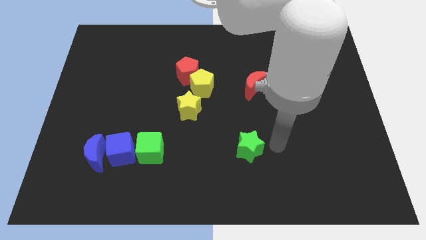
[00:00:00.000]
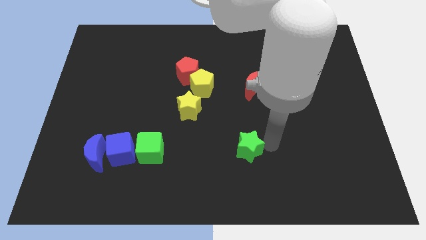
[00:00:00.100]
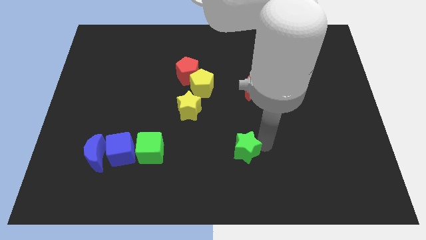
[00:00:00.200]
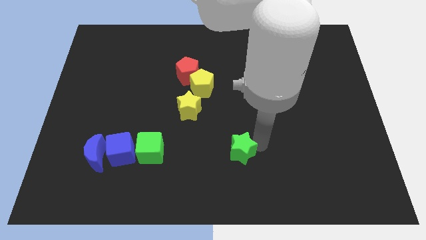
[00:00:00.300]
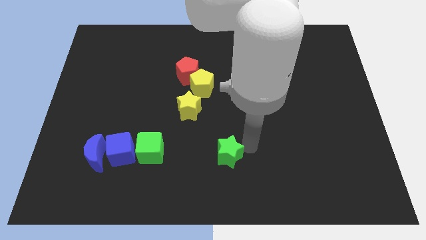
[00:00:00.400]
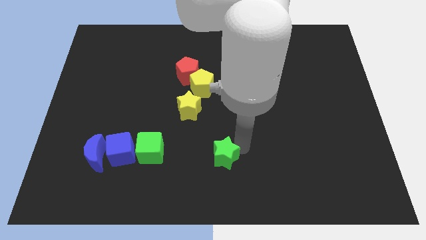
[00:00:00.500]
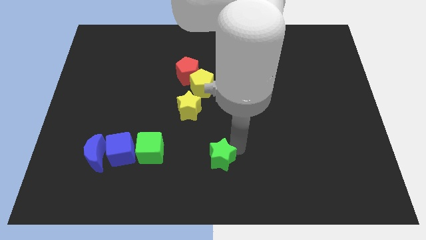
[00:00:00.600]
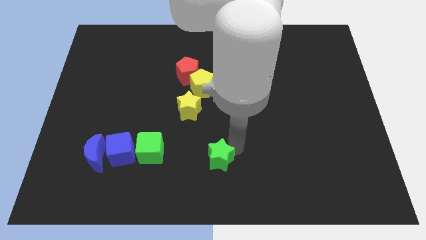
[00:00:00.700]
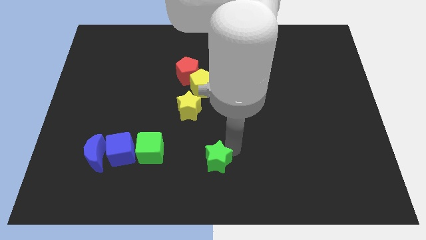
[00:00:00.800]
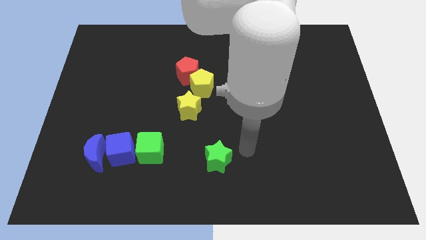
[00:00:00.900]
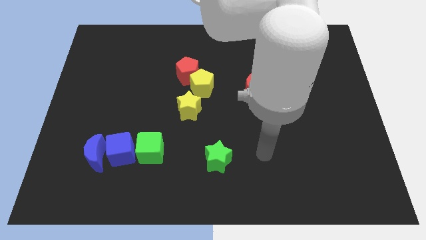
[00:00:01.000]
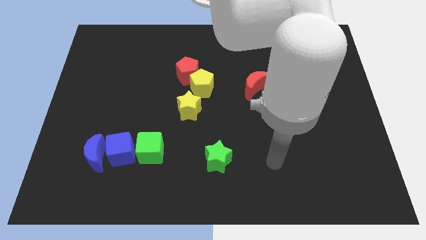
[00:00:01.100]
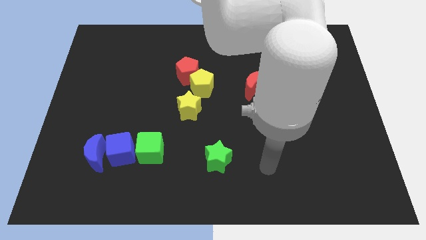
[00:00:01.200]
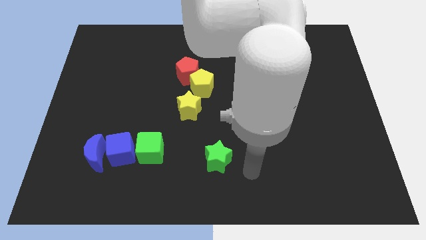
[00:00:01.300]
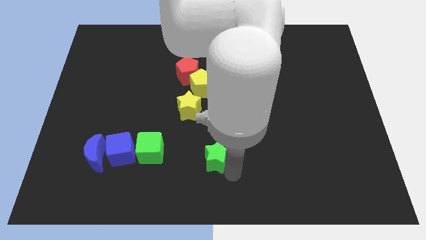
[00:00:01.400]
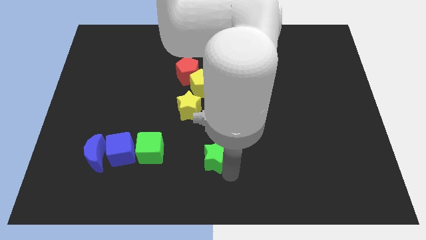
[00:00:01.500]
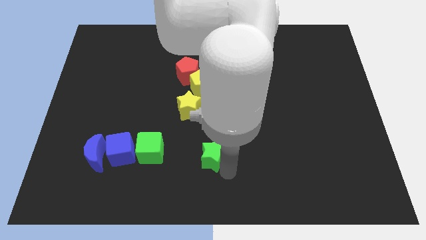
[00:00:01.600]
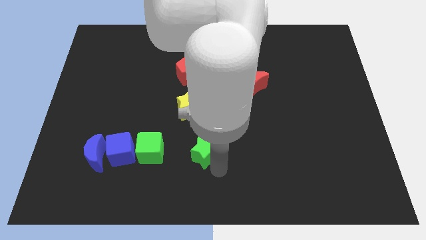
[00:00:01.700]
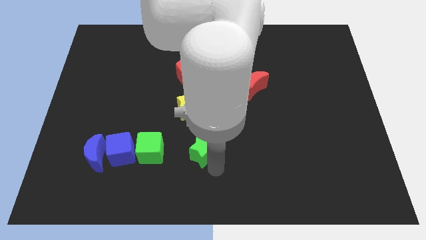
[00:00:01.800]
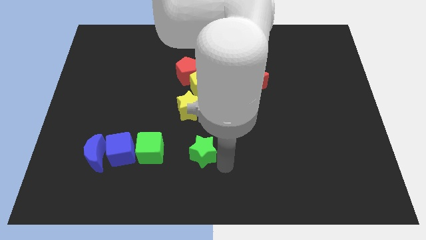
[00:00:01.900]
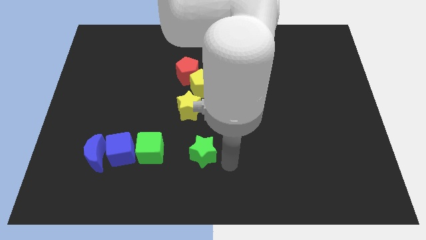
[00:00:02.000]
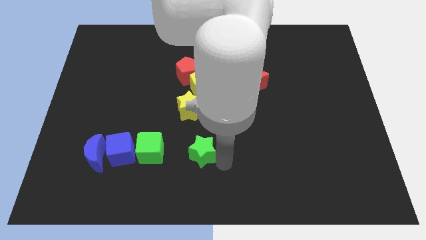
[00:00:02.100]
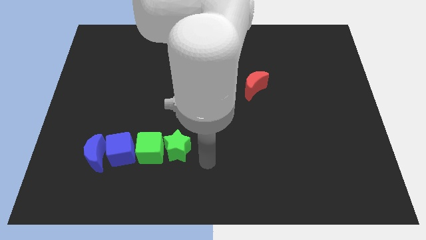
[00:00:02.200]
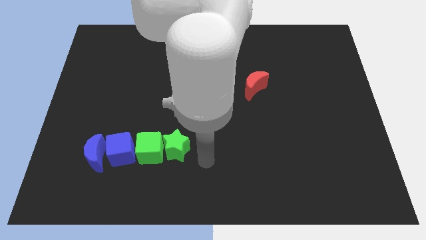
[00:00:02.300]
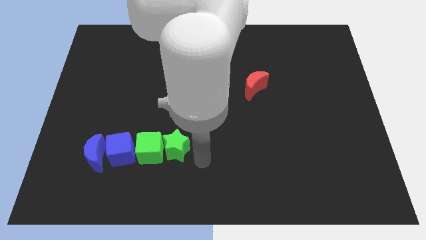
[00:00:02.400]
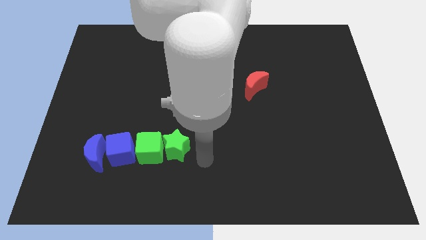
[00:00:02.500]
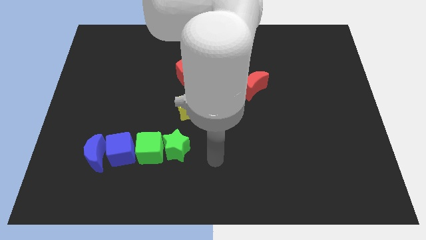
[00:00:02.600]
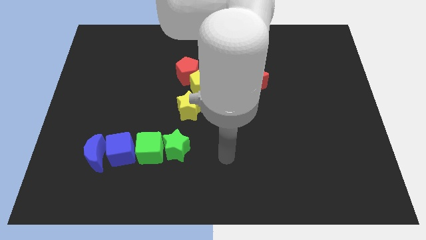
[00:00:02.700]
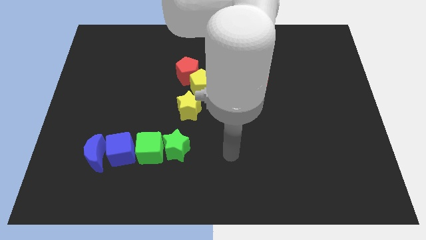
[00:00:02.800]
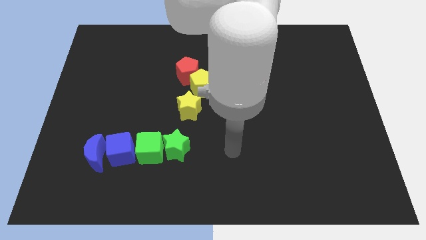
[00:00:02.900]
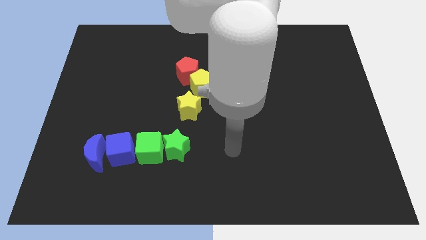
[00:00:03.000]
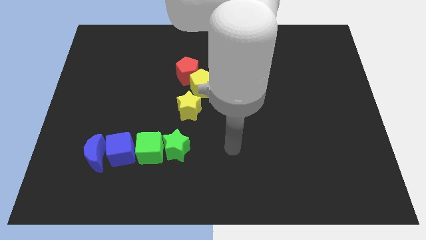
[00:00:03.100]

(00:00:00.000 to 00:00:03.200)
move the green star right to the green cube

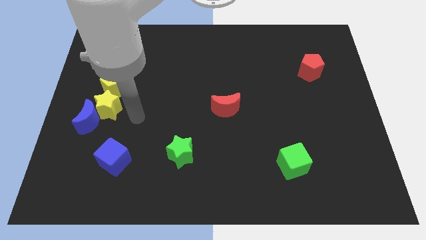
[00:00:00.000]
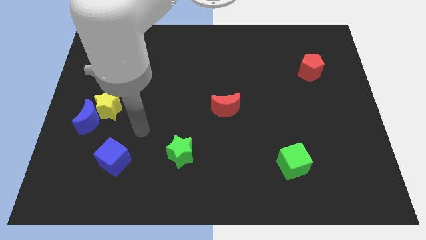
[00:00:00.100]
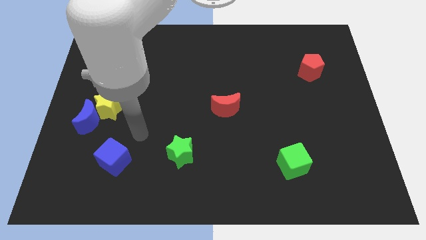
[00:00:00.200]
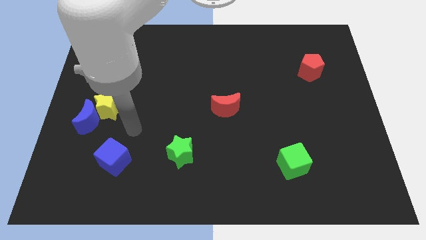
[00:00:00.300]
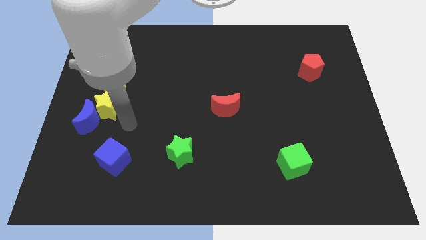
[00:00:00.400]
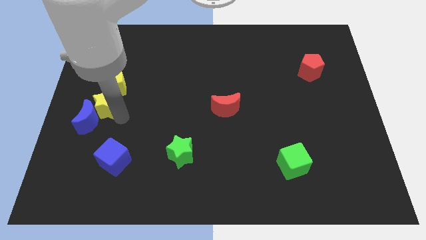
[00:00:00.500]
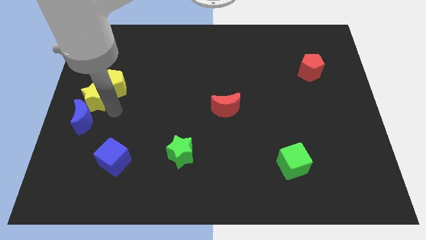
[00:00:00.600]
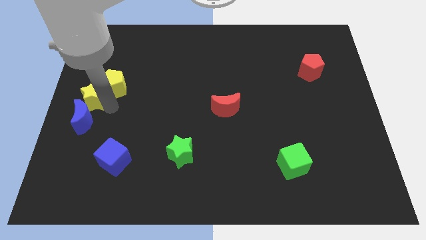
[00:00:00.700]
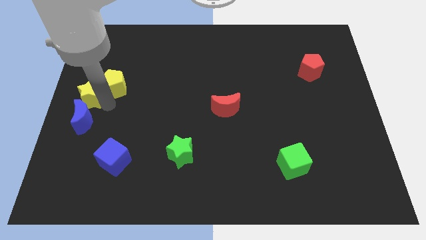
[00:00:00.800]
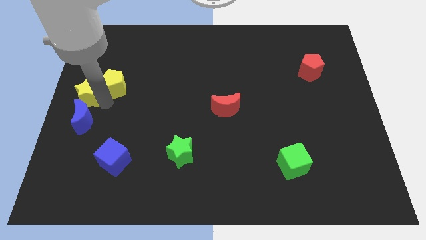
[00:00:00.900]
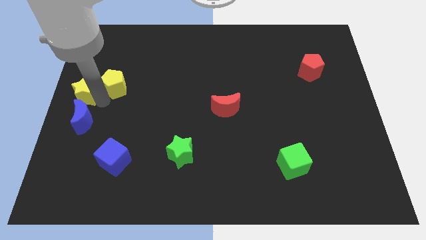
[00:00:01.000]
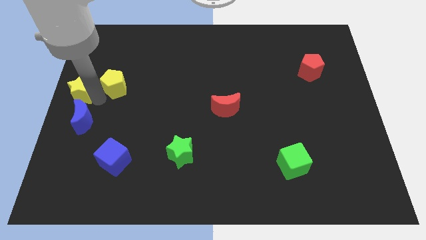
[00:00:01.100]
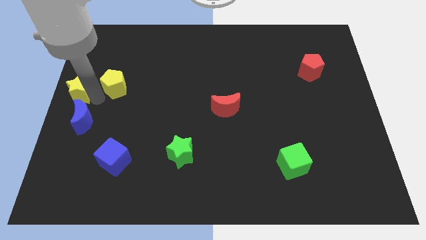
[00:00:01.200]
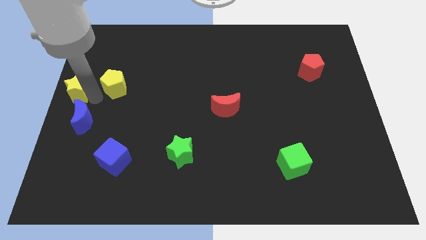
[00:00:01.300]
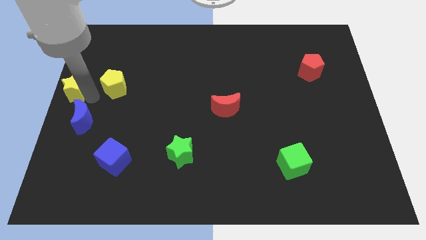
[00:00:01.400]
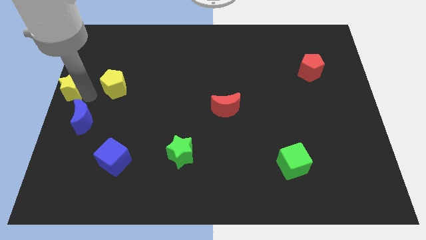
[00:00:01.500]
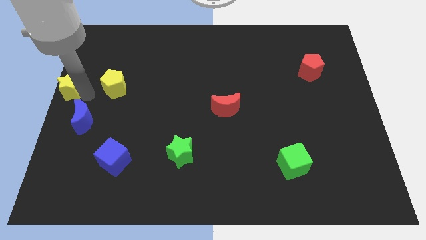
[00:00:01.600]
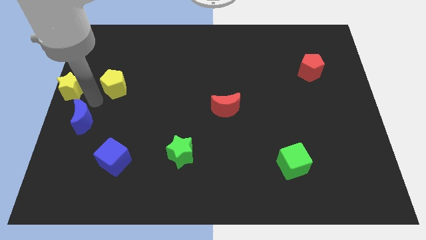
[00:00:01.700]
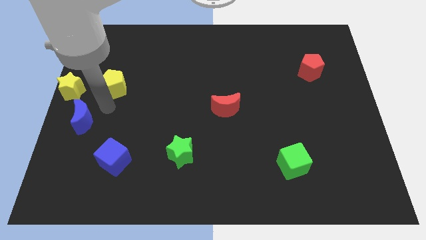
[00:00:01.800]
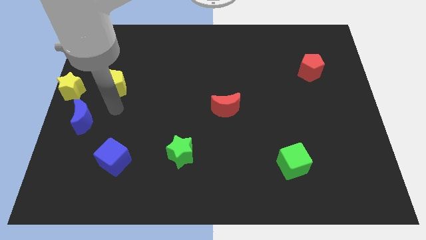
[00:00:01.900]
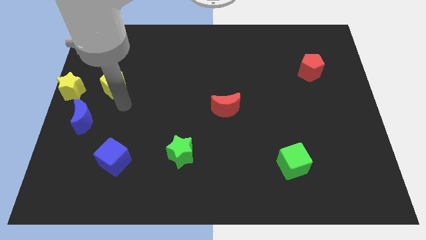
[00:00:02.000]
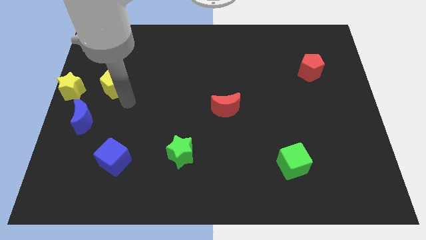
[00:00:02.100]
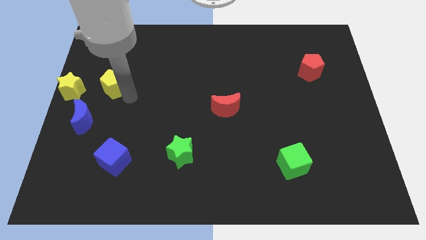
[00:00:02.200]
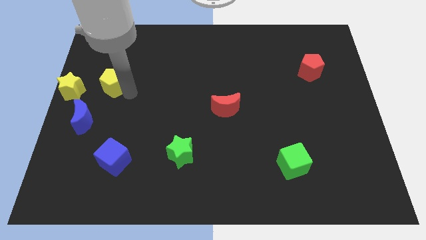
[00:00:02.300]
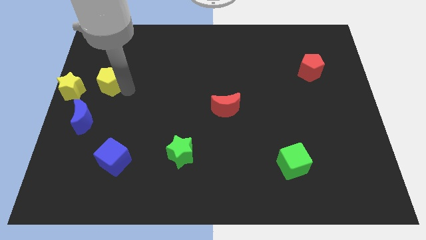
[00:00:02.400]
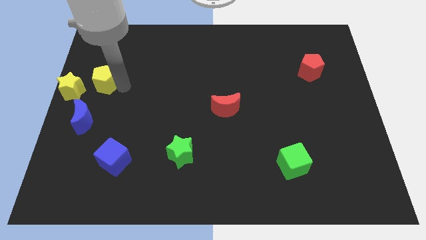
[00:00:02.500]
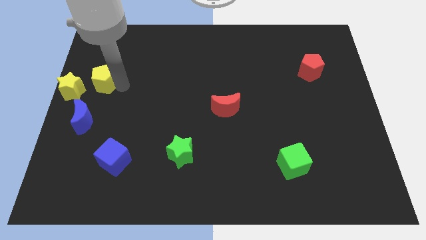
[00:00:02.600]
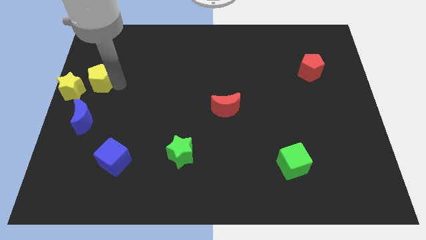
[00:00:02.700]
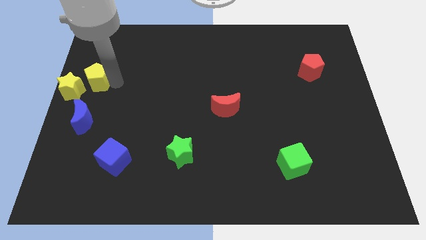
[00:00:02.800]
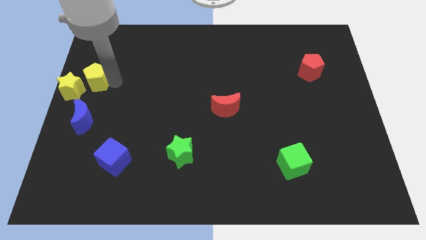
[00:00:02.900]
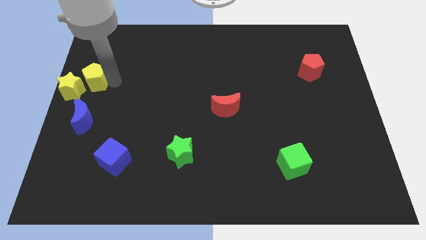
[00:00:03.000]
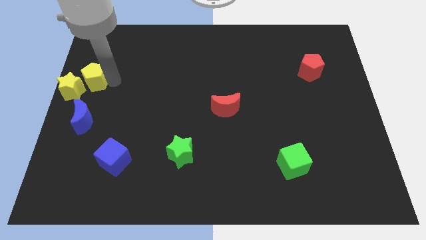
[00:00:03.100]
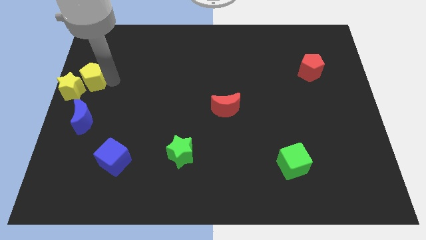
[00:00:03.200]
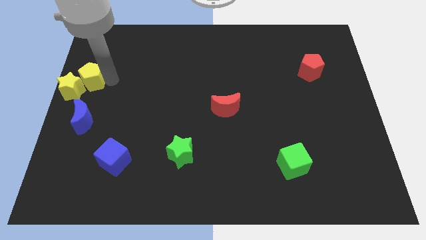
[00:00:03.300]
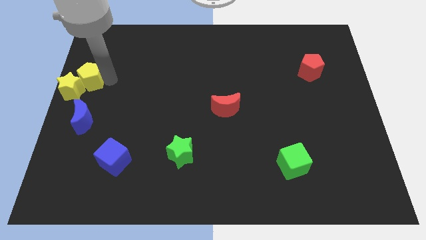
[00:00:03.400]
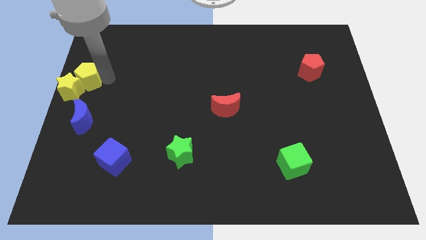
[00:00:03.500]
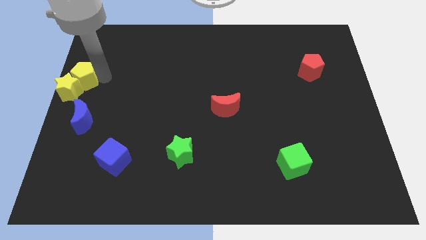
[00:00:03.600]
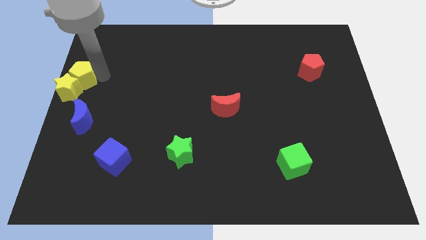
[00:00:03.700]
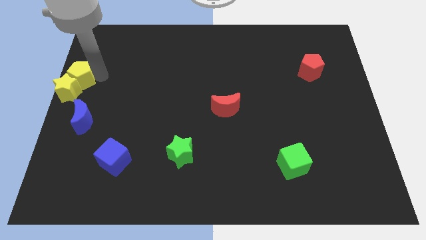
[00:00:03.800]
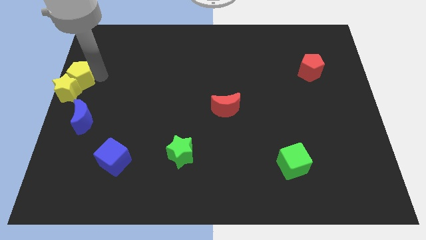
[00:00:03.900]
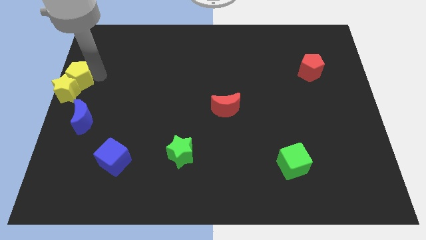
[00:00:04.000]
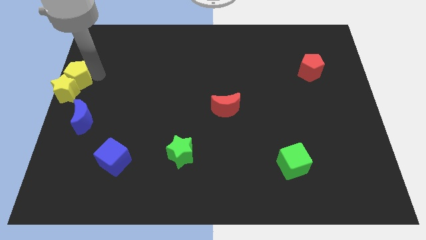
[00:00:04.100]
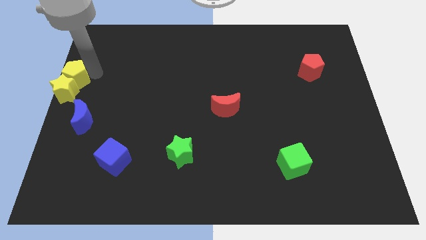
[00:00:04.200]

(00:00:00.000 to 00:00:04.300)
move the yellow blocks to middle left of board

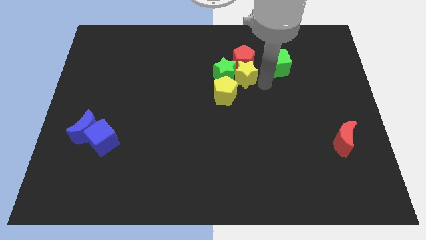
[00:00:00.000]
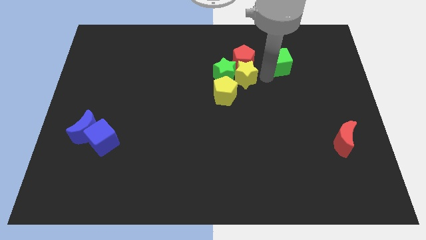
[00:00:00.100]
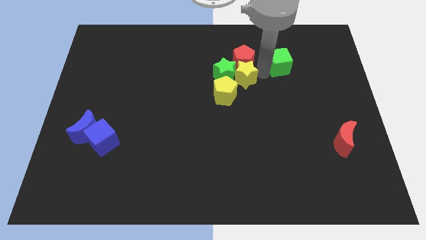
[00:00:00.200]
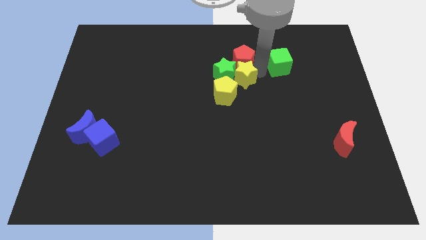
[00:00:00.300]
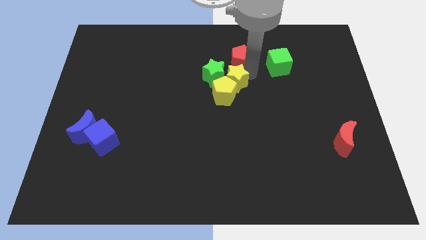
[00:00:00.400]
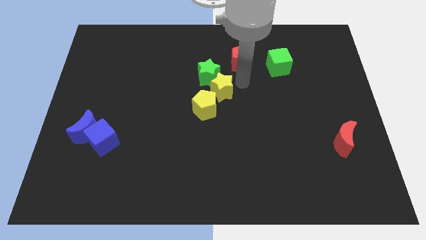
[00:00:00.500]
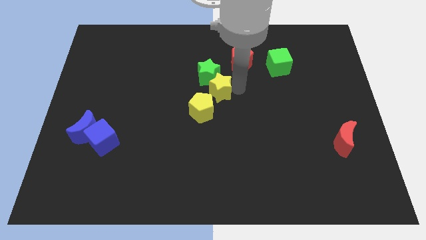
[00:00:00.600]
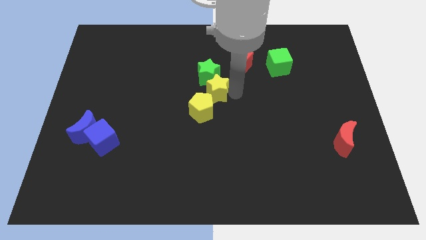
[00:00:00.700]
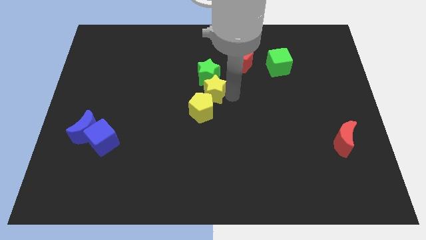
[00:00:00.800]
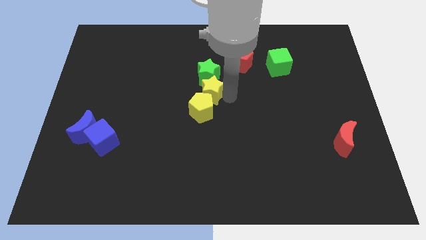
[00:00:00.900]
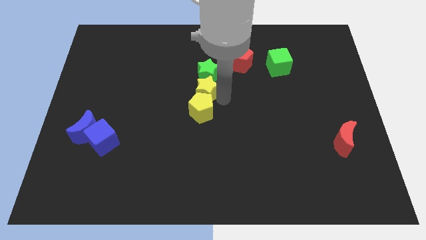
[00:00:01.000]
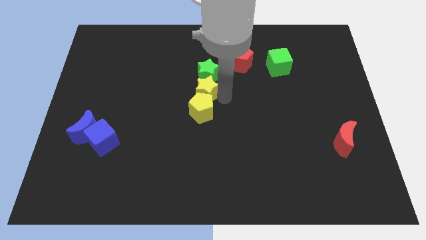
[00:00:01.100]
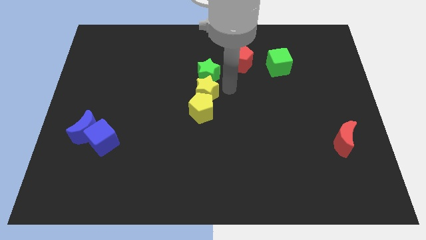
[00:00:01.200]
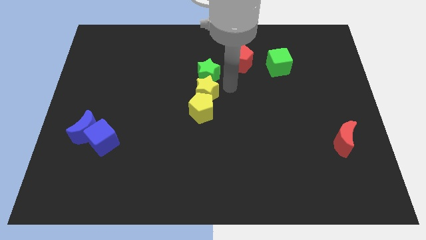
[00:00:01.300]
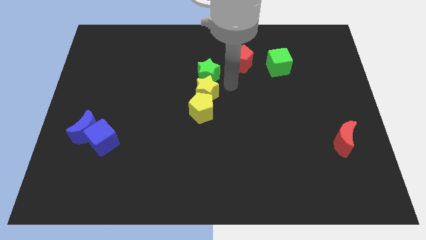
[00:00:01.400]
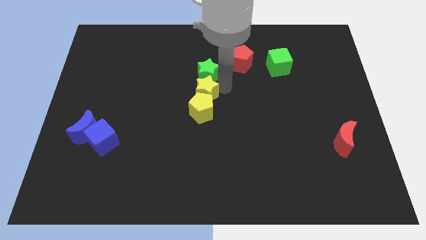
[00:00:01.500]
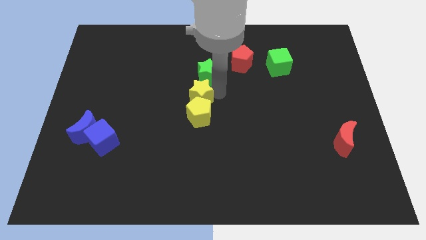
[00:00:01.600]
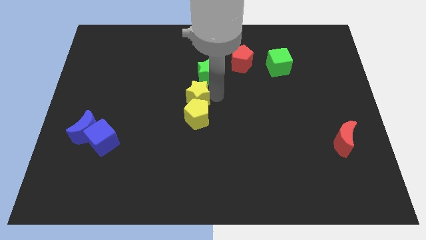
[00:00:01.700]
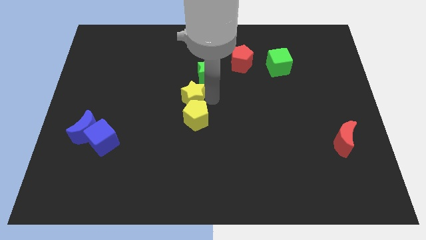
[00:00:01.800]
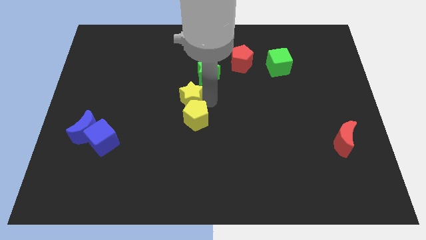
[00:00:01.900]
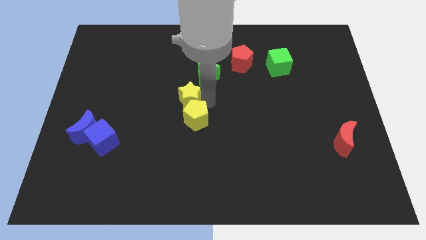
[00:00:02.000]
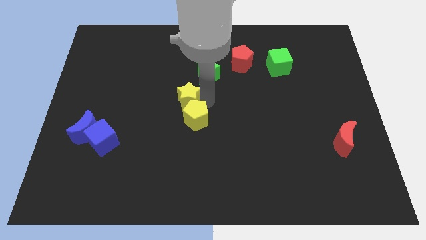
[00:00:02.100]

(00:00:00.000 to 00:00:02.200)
separate yellow star form red pentagon
